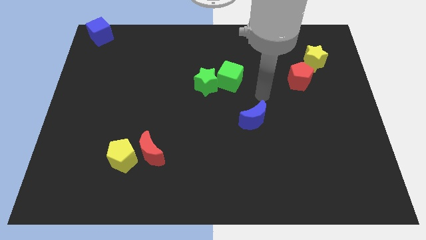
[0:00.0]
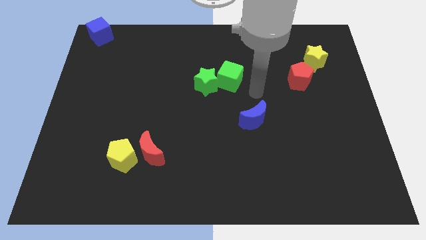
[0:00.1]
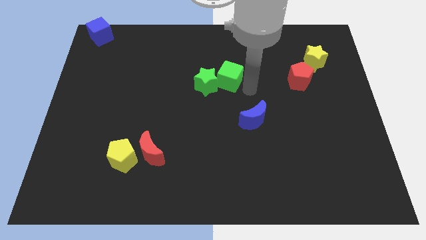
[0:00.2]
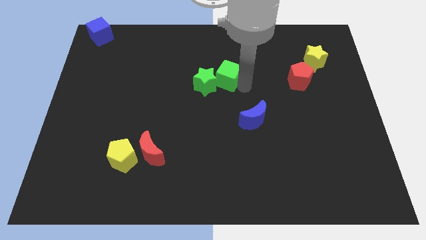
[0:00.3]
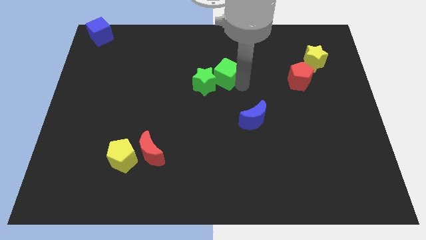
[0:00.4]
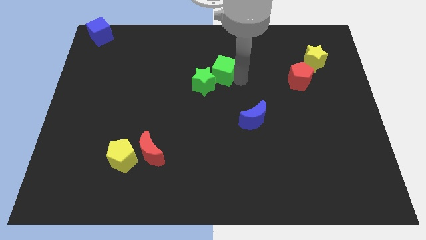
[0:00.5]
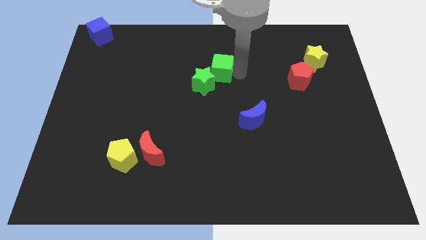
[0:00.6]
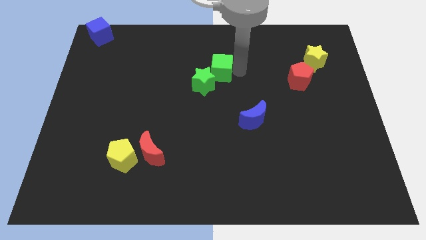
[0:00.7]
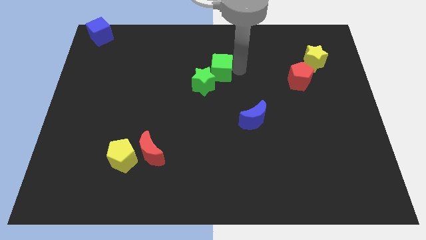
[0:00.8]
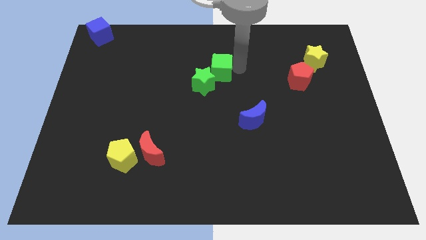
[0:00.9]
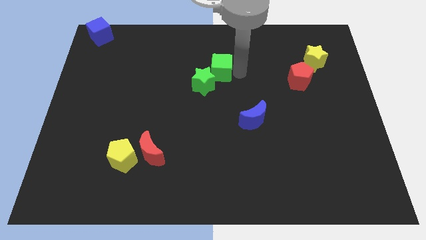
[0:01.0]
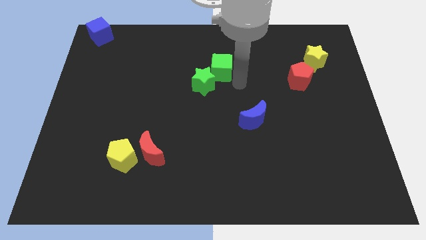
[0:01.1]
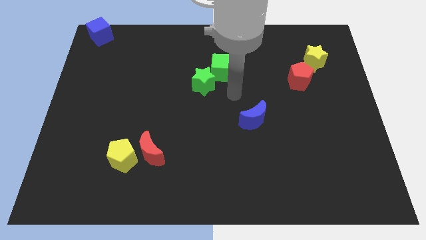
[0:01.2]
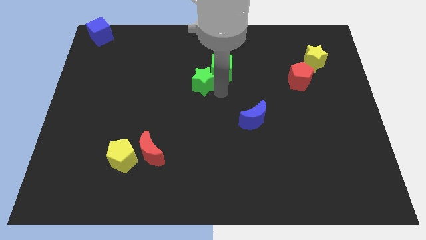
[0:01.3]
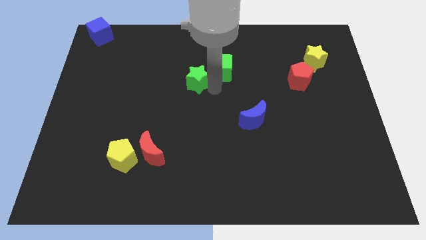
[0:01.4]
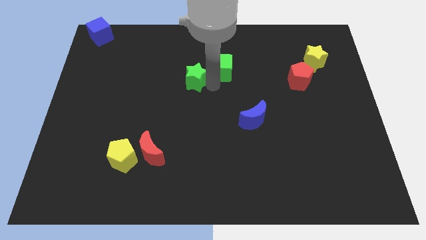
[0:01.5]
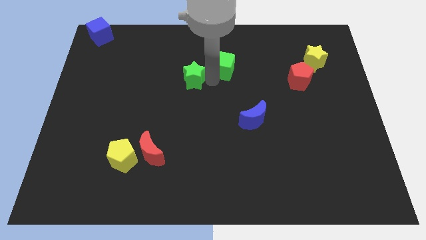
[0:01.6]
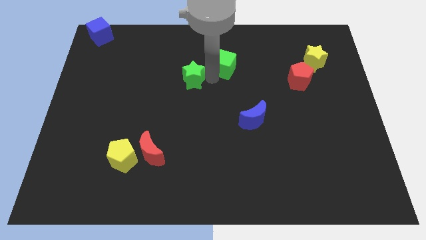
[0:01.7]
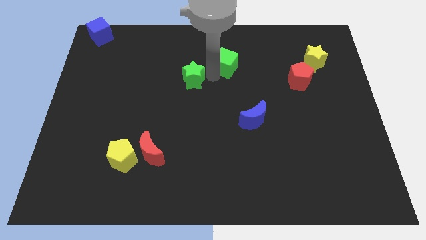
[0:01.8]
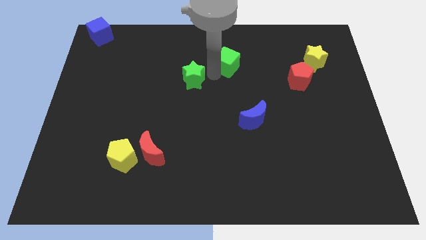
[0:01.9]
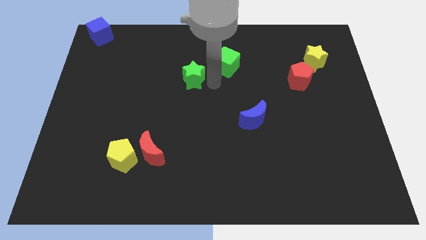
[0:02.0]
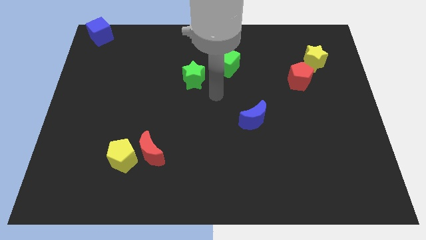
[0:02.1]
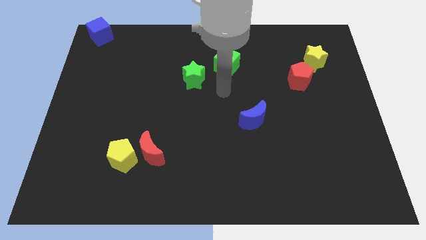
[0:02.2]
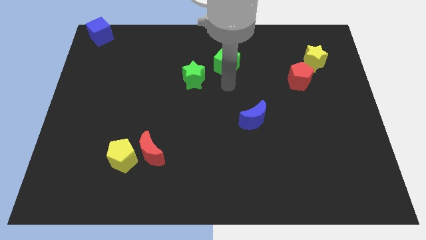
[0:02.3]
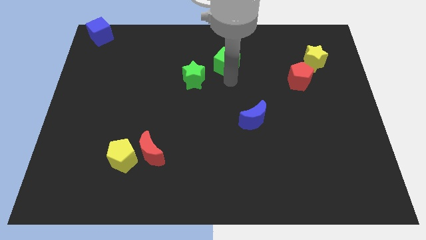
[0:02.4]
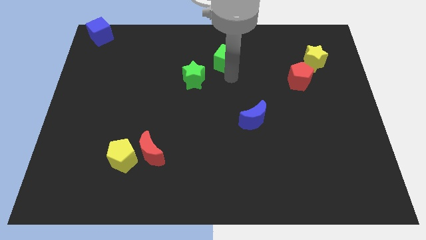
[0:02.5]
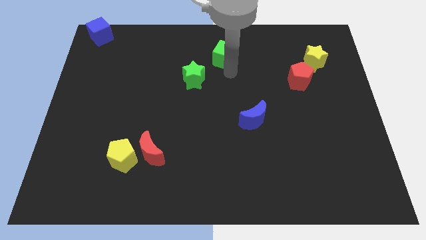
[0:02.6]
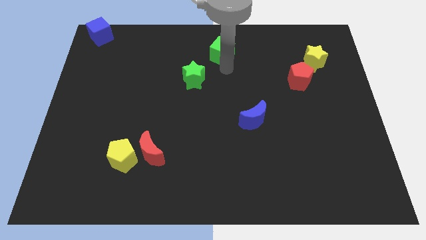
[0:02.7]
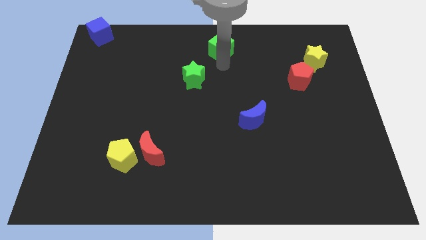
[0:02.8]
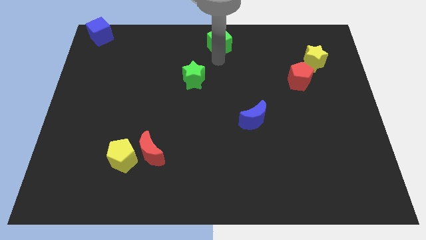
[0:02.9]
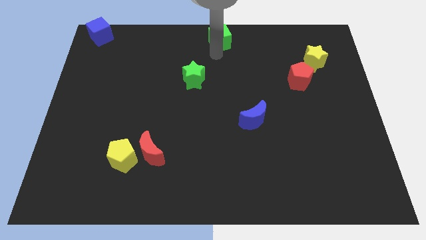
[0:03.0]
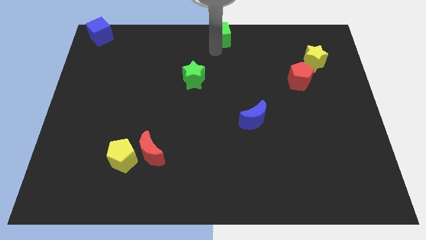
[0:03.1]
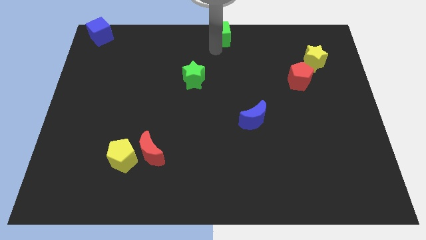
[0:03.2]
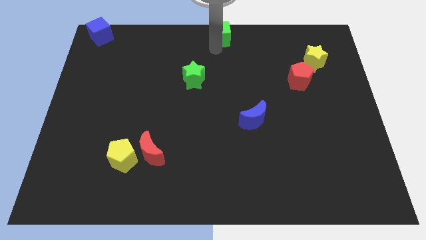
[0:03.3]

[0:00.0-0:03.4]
push green cube toward top

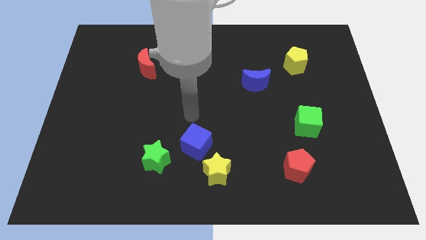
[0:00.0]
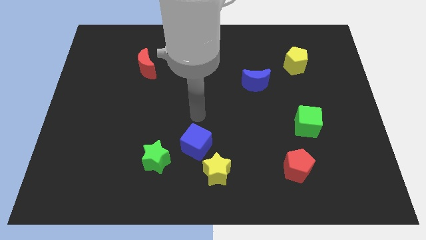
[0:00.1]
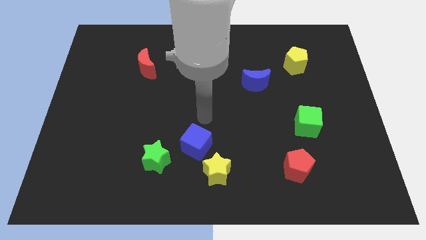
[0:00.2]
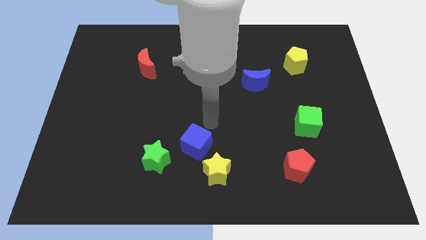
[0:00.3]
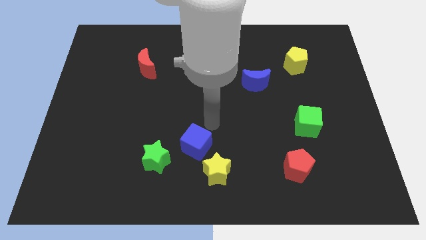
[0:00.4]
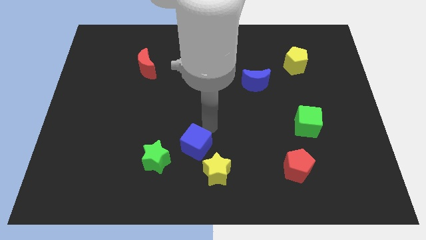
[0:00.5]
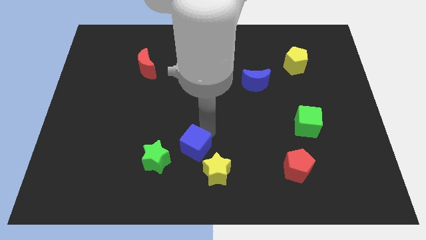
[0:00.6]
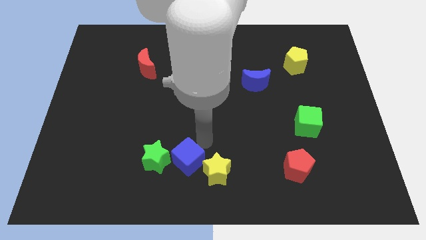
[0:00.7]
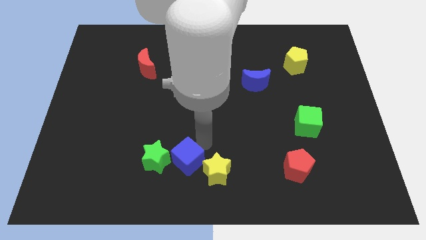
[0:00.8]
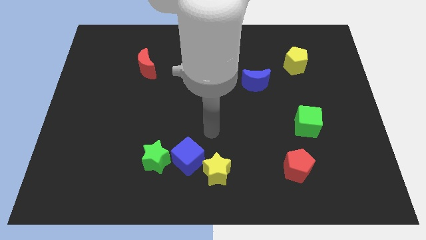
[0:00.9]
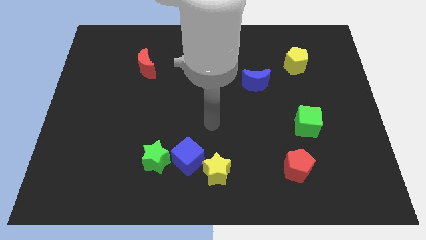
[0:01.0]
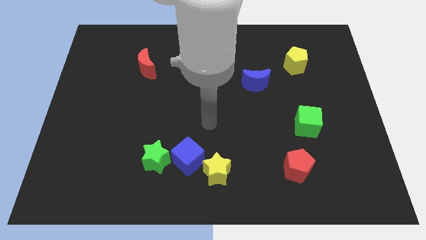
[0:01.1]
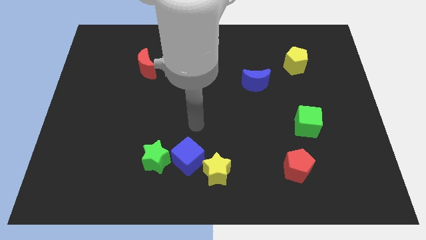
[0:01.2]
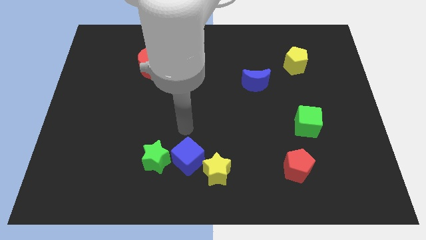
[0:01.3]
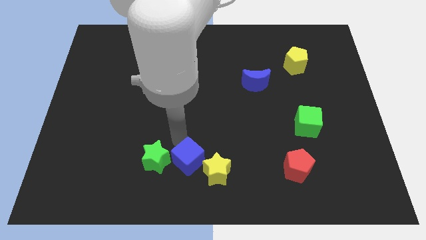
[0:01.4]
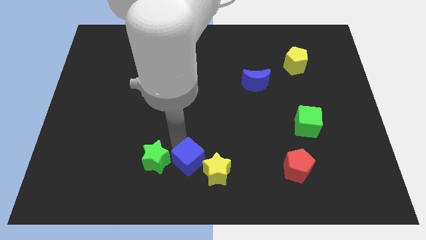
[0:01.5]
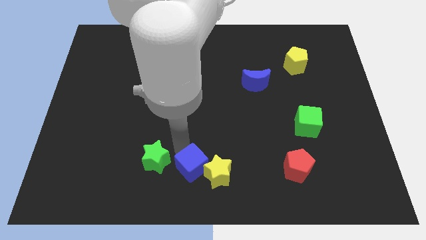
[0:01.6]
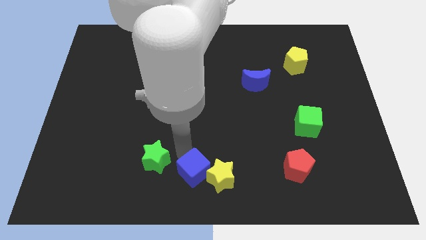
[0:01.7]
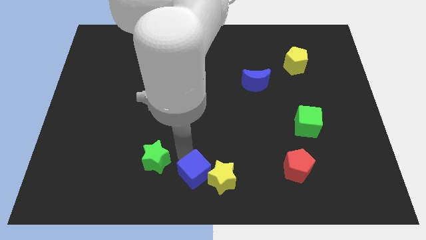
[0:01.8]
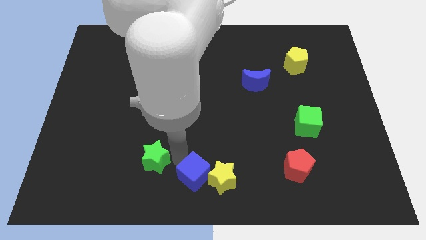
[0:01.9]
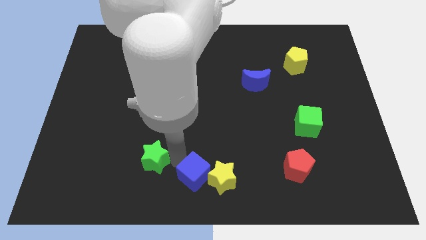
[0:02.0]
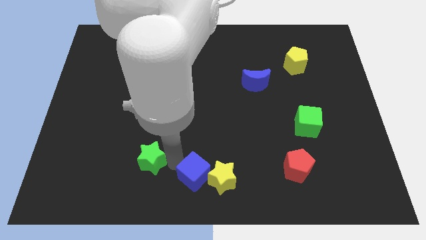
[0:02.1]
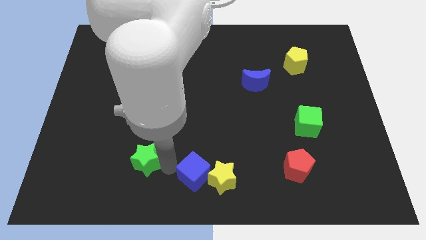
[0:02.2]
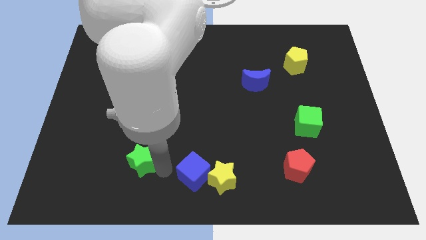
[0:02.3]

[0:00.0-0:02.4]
move the blue cube into the yellow star

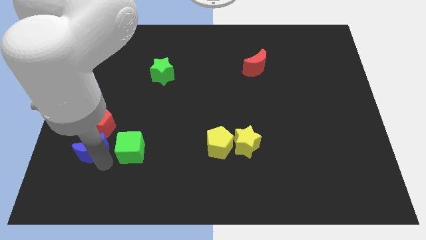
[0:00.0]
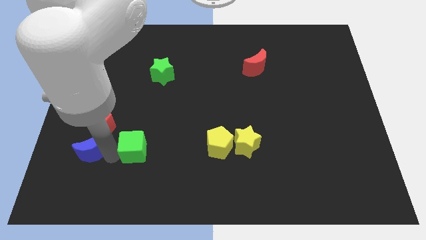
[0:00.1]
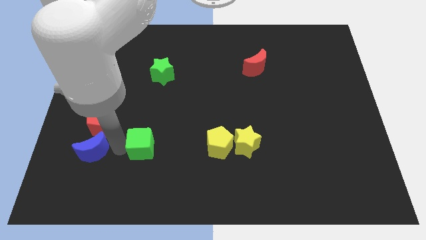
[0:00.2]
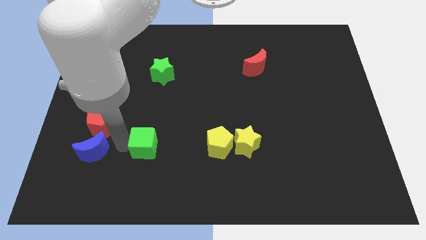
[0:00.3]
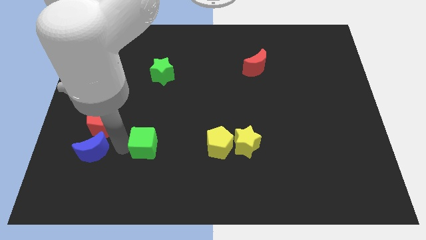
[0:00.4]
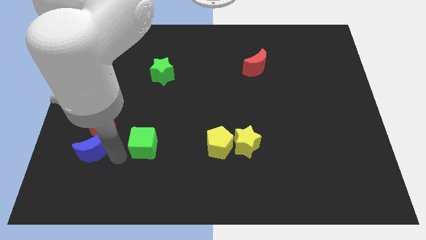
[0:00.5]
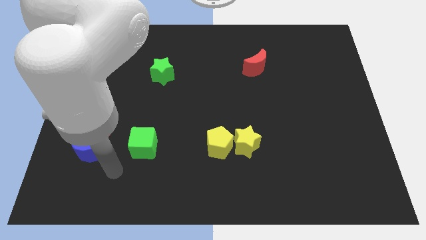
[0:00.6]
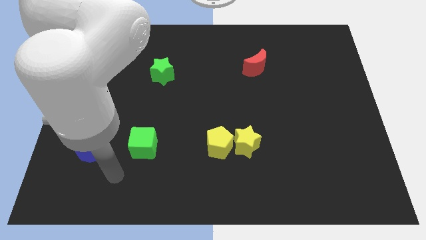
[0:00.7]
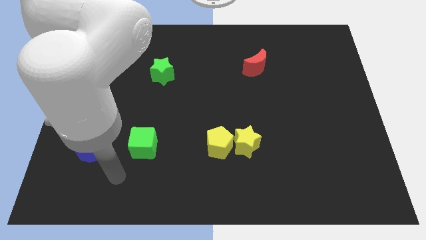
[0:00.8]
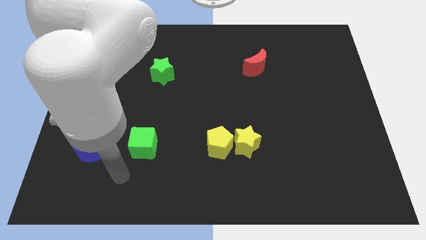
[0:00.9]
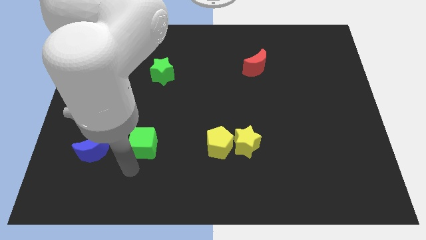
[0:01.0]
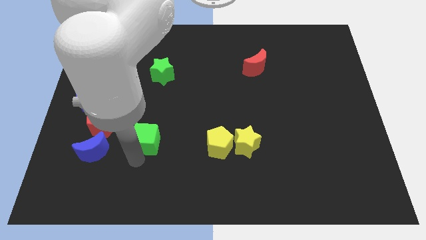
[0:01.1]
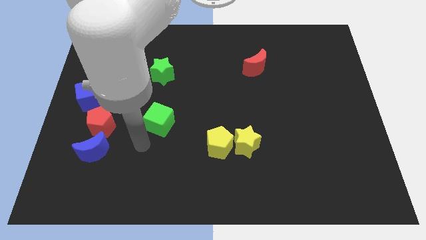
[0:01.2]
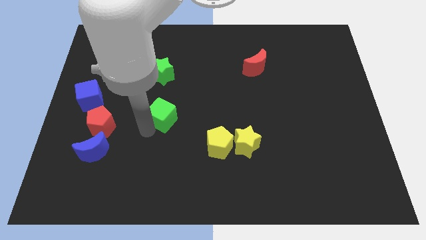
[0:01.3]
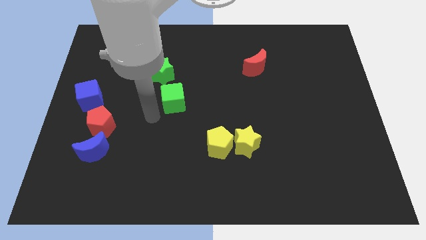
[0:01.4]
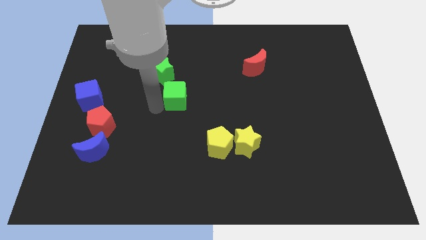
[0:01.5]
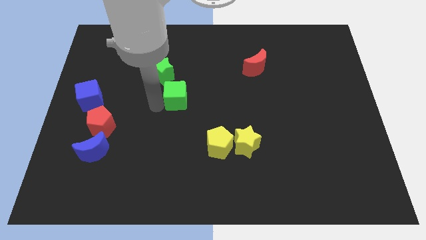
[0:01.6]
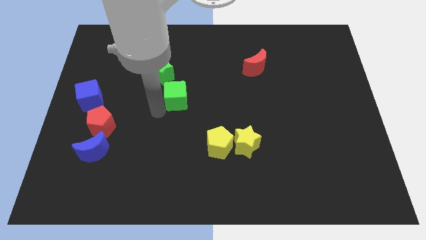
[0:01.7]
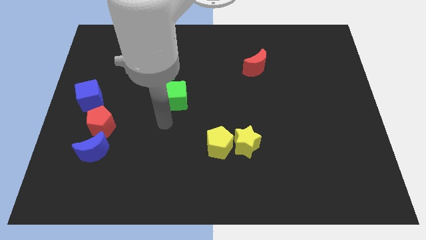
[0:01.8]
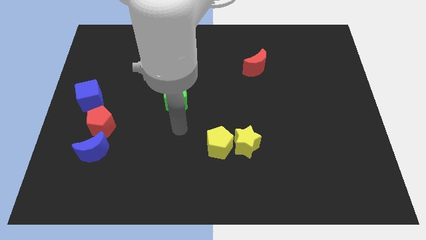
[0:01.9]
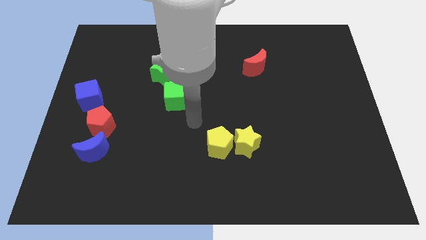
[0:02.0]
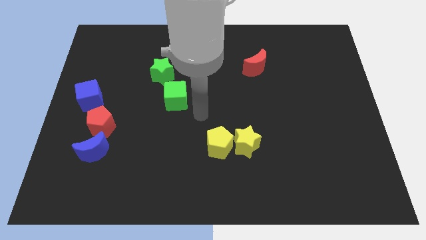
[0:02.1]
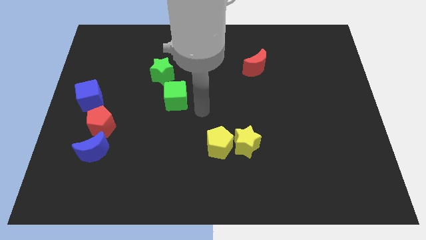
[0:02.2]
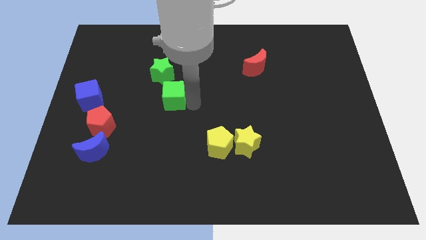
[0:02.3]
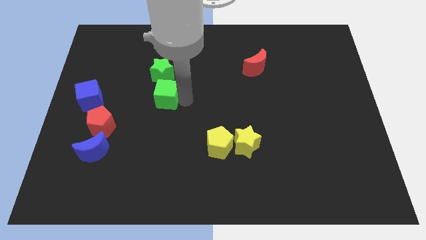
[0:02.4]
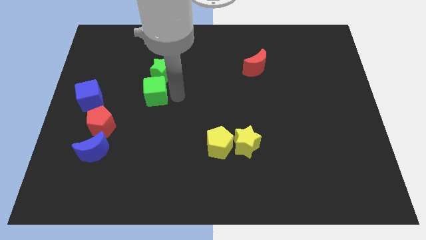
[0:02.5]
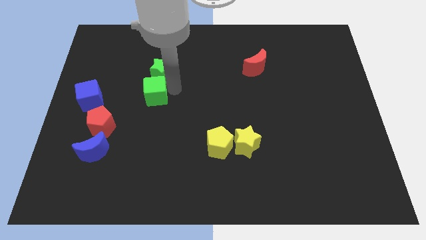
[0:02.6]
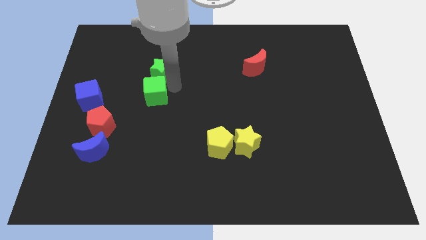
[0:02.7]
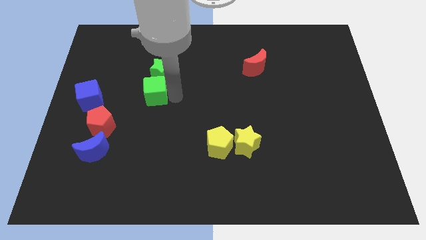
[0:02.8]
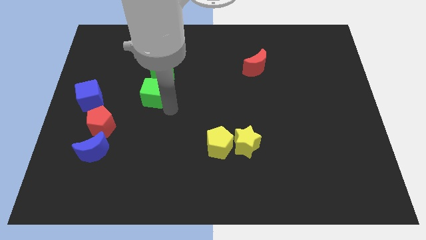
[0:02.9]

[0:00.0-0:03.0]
push the green cube below the green star

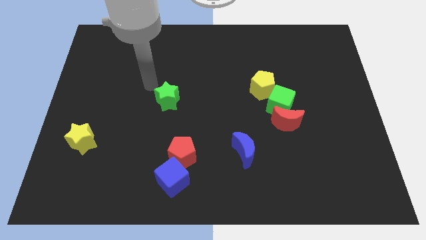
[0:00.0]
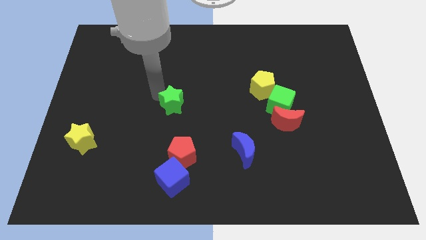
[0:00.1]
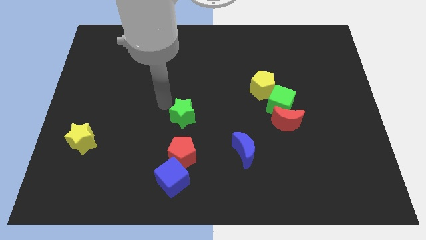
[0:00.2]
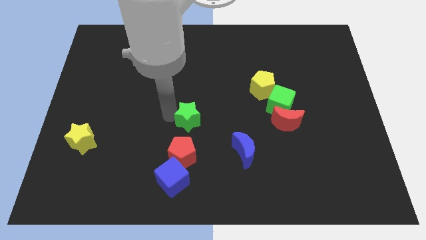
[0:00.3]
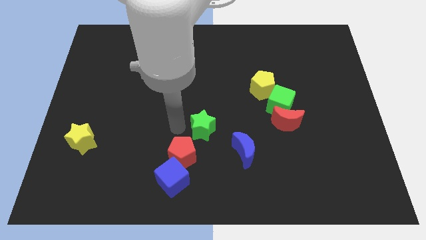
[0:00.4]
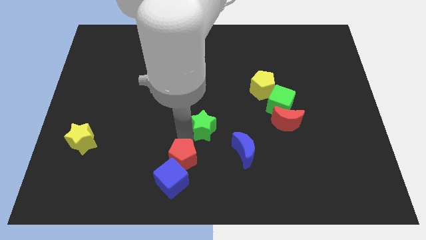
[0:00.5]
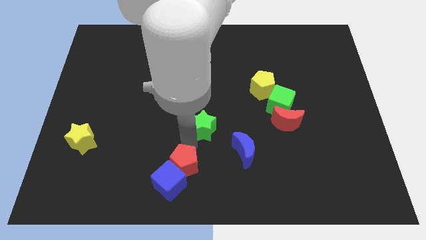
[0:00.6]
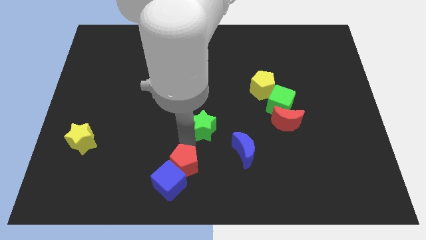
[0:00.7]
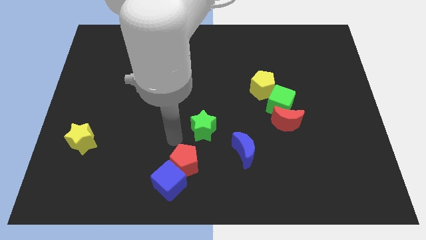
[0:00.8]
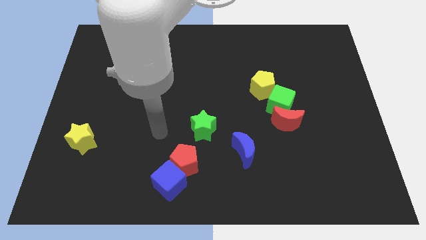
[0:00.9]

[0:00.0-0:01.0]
push green star on top right of red pentagon
